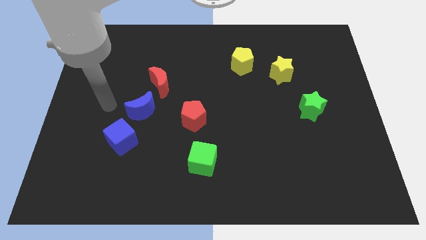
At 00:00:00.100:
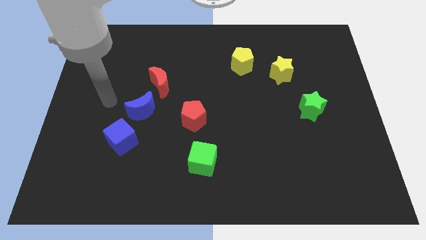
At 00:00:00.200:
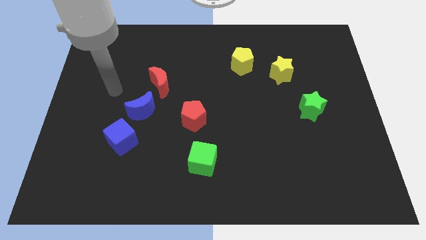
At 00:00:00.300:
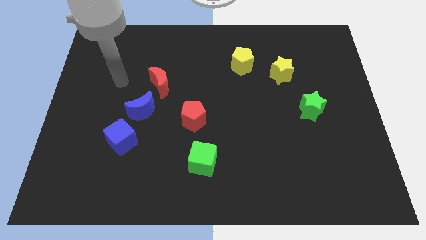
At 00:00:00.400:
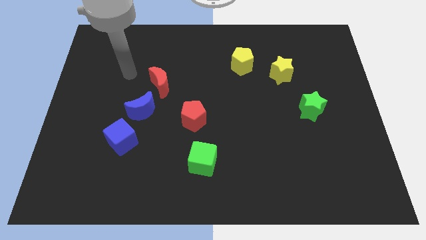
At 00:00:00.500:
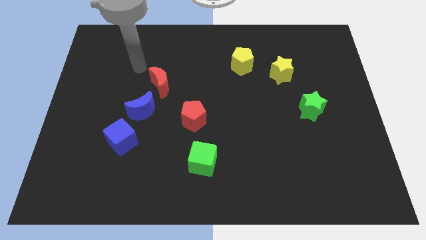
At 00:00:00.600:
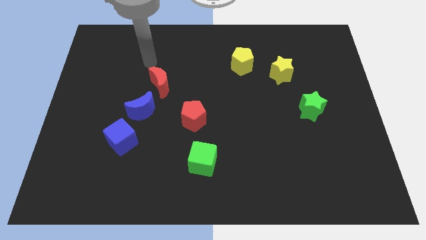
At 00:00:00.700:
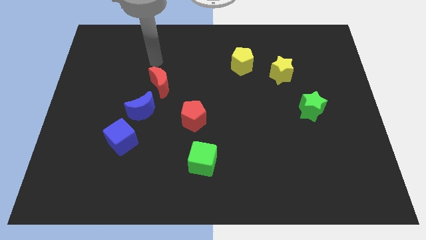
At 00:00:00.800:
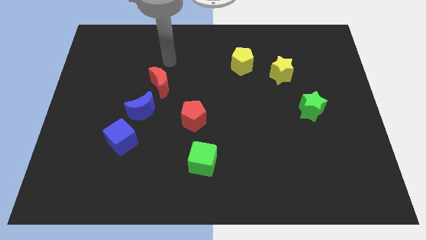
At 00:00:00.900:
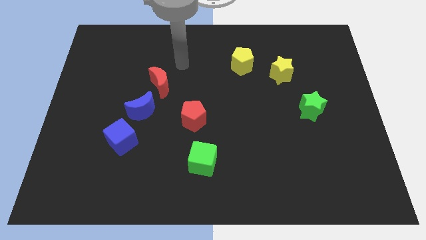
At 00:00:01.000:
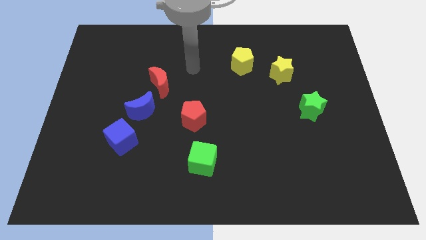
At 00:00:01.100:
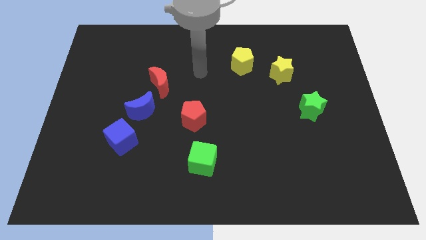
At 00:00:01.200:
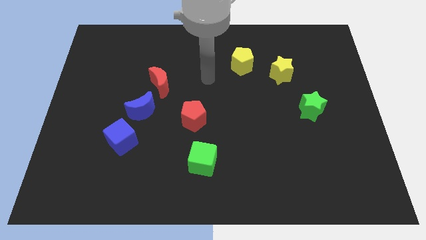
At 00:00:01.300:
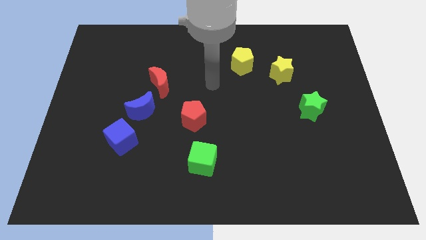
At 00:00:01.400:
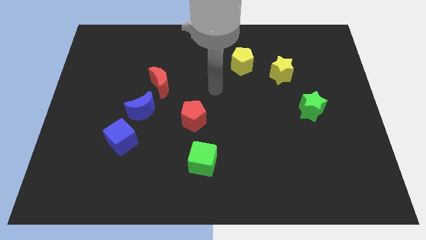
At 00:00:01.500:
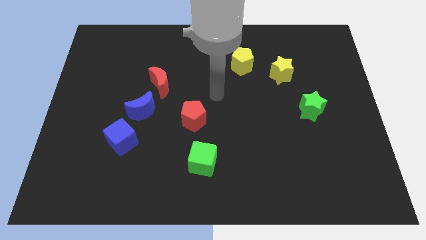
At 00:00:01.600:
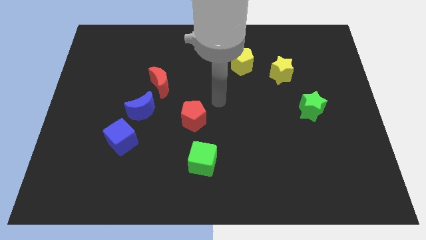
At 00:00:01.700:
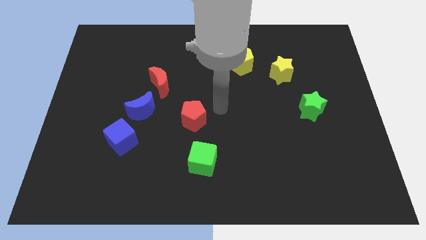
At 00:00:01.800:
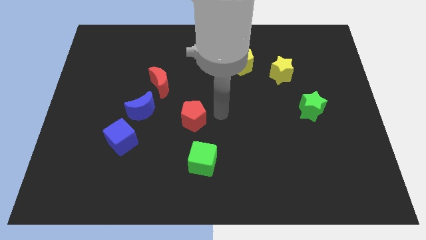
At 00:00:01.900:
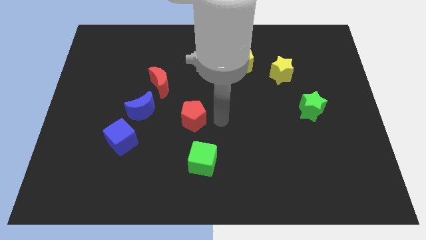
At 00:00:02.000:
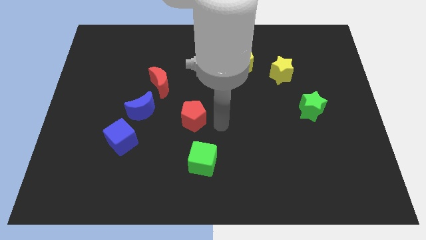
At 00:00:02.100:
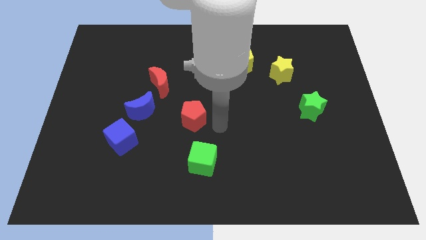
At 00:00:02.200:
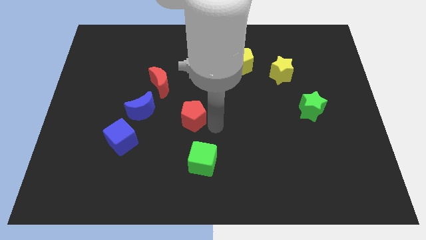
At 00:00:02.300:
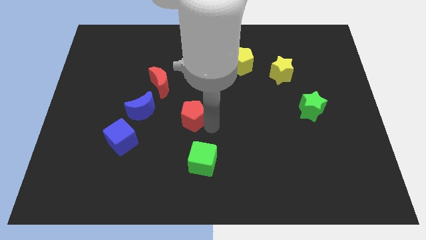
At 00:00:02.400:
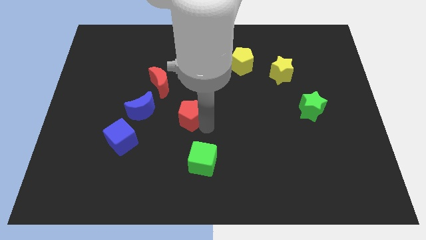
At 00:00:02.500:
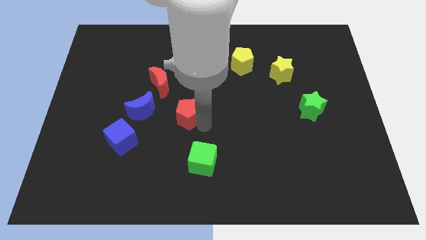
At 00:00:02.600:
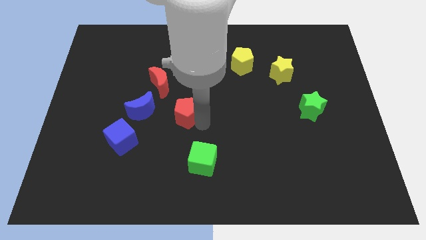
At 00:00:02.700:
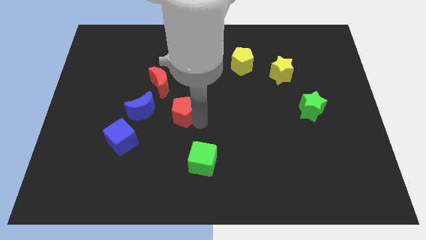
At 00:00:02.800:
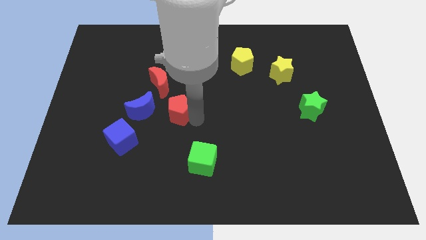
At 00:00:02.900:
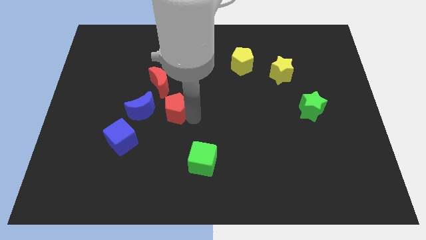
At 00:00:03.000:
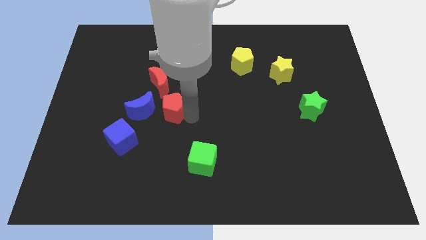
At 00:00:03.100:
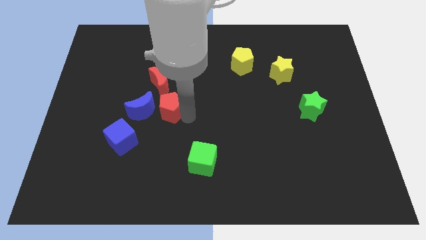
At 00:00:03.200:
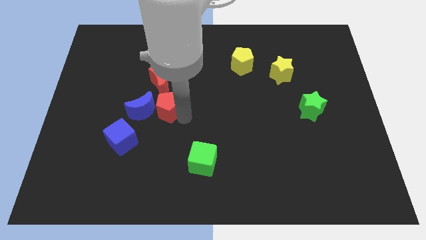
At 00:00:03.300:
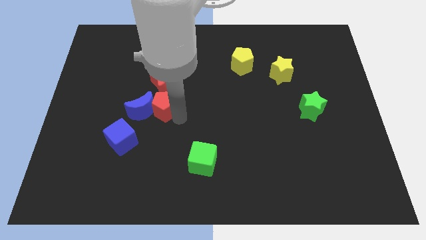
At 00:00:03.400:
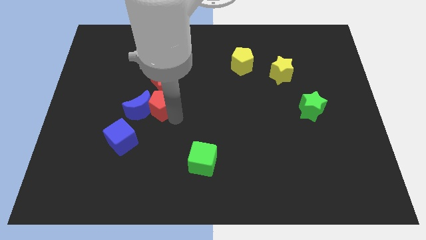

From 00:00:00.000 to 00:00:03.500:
push the red pentagon close to the blue moon

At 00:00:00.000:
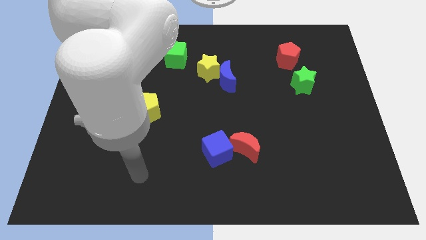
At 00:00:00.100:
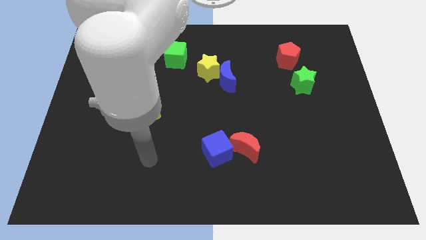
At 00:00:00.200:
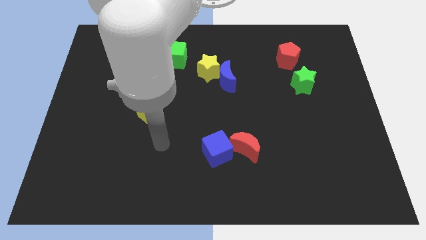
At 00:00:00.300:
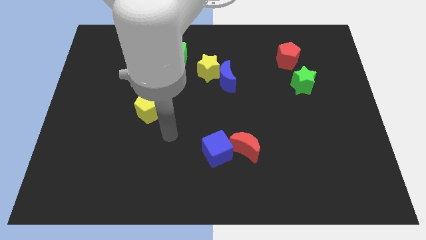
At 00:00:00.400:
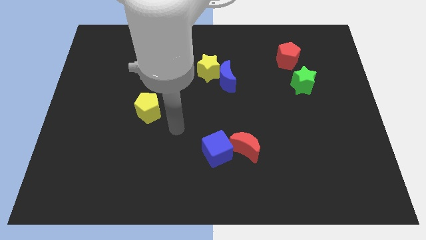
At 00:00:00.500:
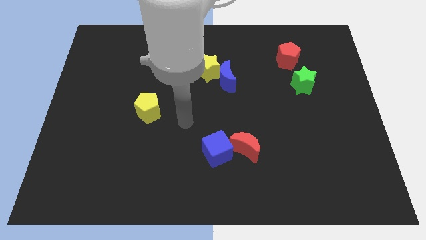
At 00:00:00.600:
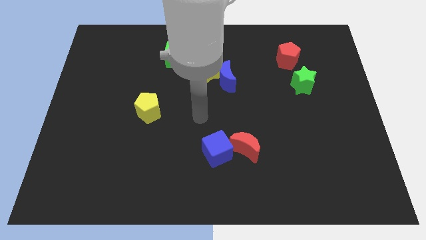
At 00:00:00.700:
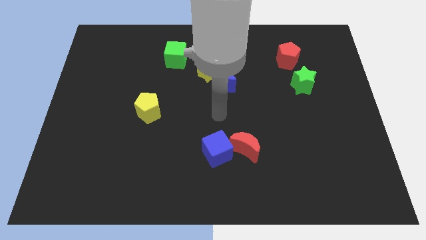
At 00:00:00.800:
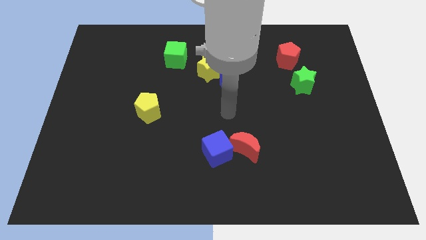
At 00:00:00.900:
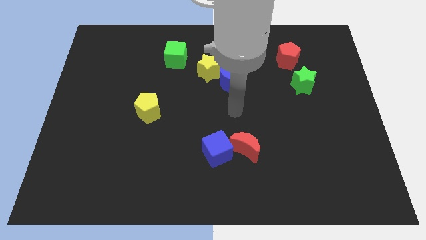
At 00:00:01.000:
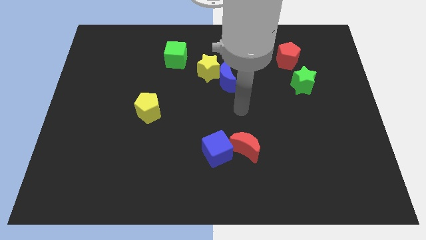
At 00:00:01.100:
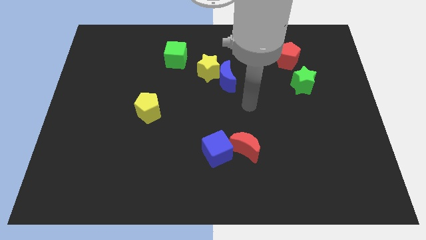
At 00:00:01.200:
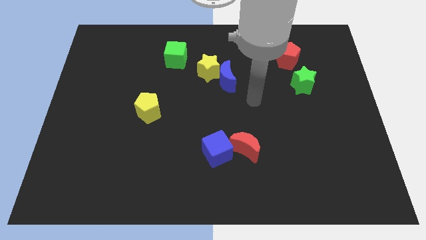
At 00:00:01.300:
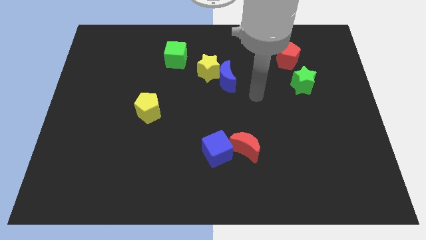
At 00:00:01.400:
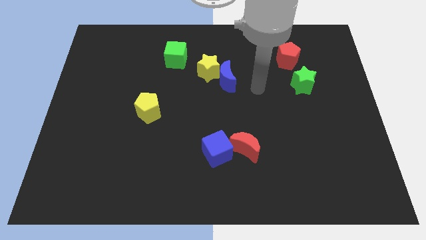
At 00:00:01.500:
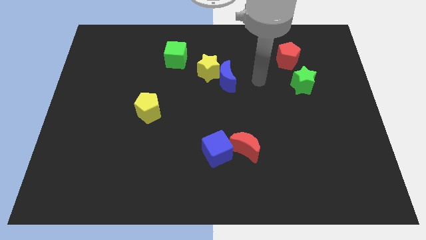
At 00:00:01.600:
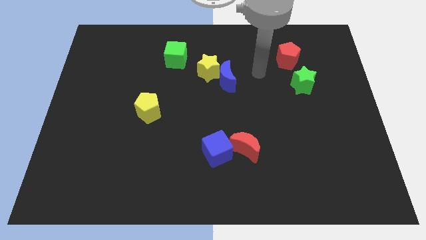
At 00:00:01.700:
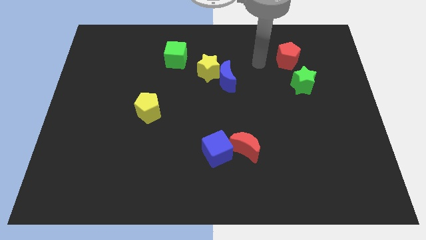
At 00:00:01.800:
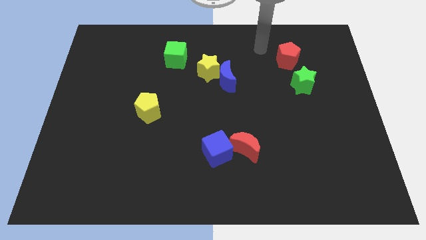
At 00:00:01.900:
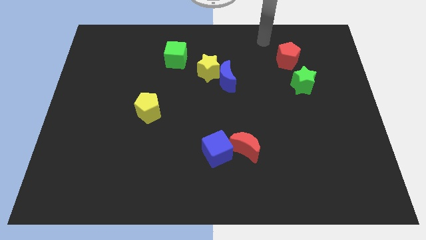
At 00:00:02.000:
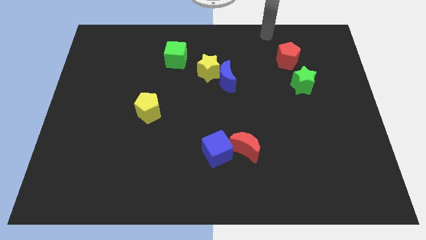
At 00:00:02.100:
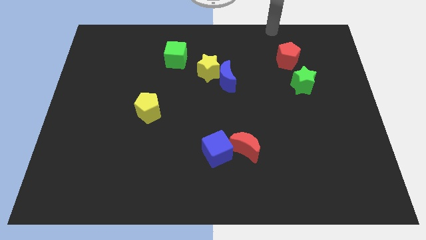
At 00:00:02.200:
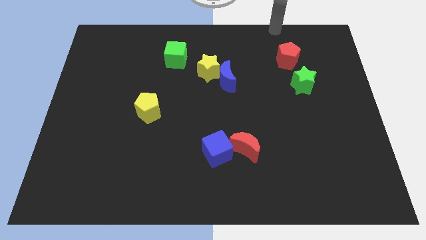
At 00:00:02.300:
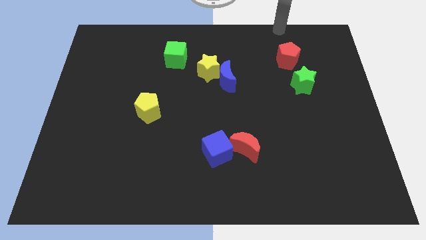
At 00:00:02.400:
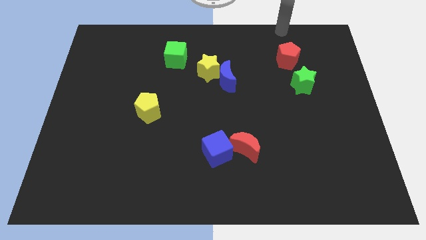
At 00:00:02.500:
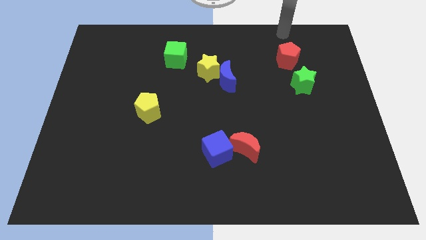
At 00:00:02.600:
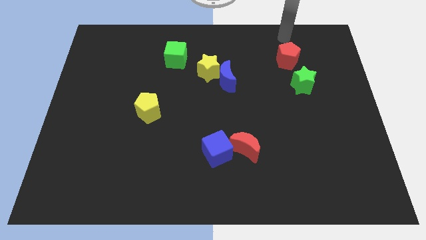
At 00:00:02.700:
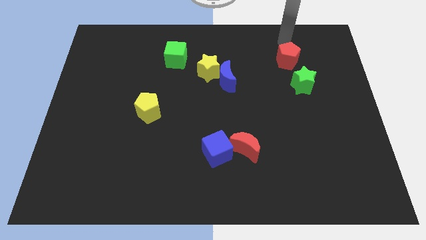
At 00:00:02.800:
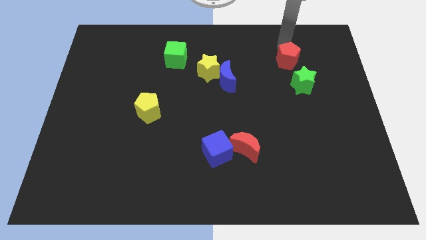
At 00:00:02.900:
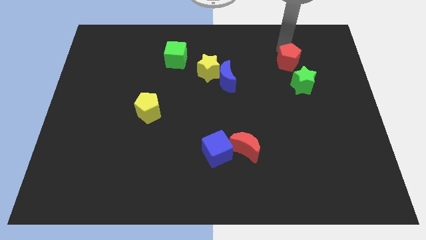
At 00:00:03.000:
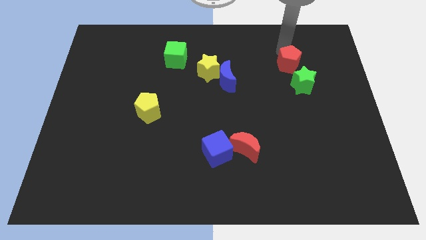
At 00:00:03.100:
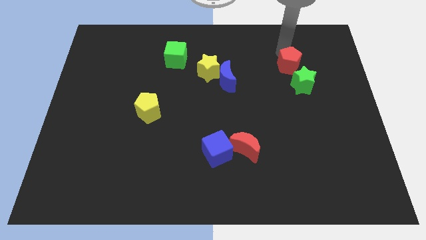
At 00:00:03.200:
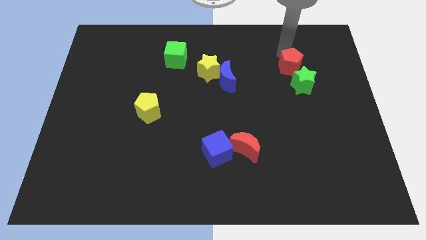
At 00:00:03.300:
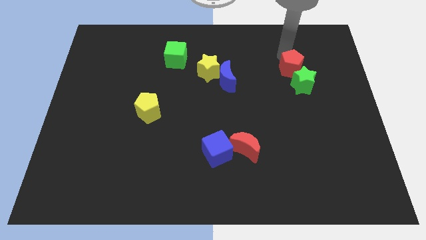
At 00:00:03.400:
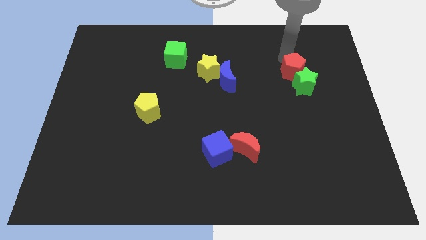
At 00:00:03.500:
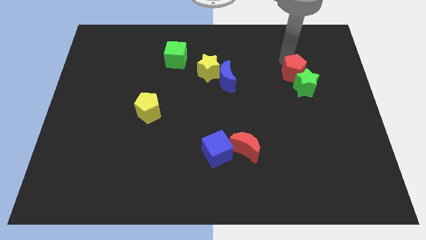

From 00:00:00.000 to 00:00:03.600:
slide the red pentagon close to the green star

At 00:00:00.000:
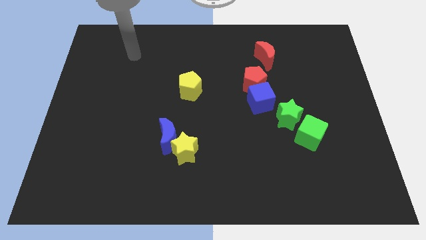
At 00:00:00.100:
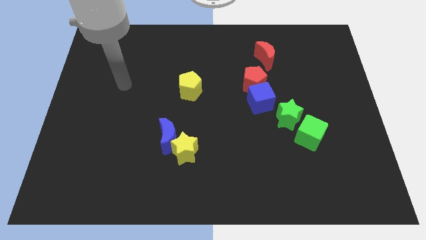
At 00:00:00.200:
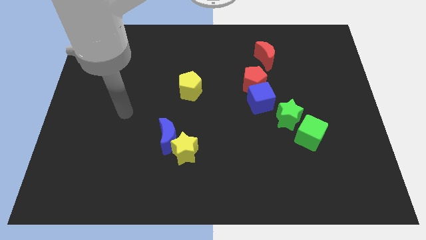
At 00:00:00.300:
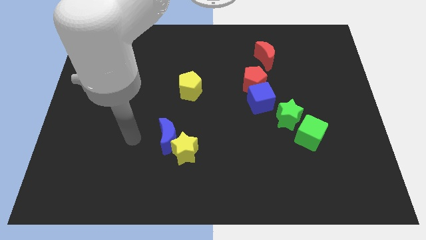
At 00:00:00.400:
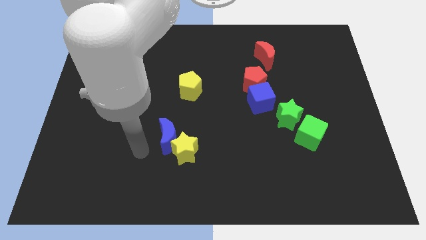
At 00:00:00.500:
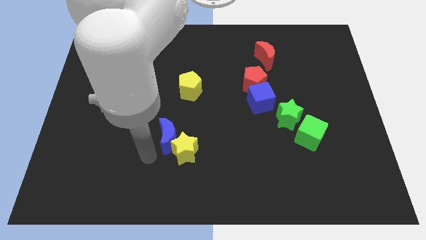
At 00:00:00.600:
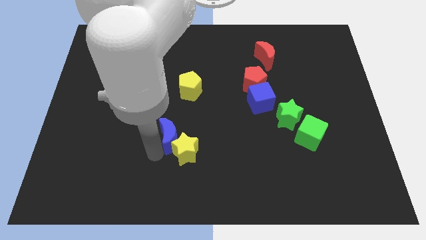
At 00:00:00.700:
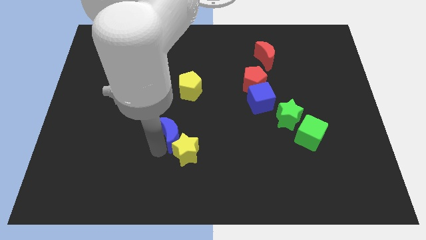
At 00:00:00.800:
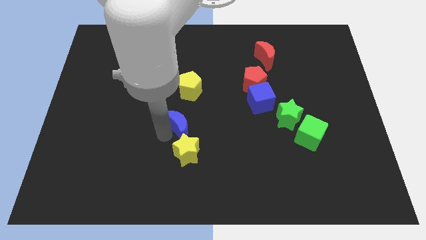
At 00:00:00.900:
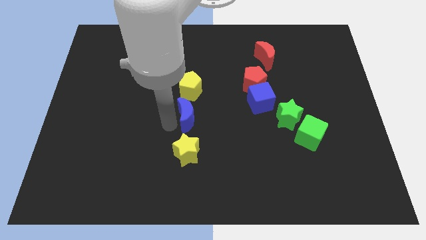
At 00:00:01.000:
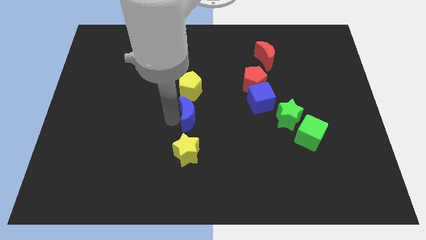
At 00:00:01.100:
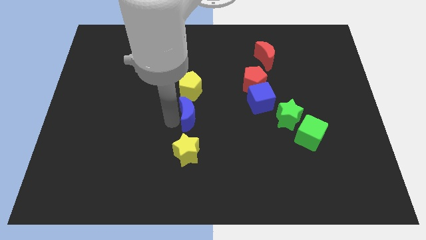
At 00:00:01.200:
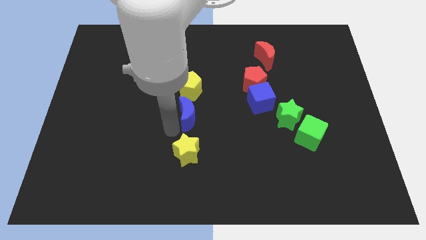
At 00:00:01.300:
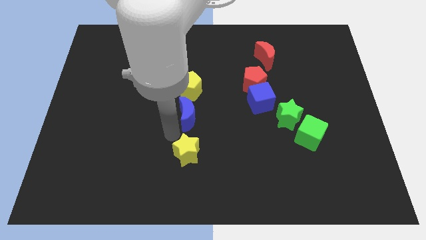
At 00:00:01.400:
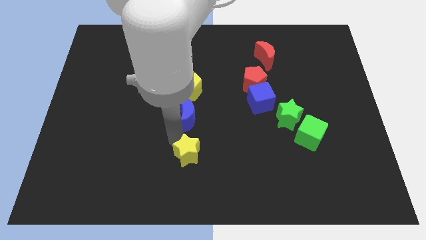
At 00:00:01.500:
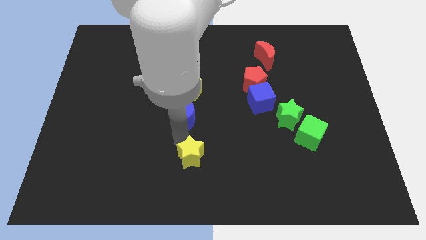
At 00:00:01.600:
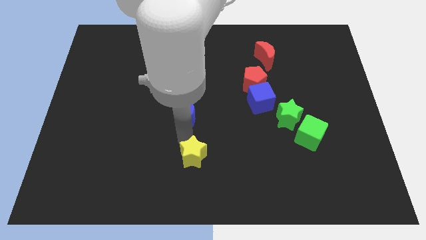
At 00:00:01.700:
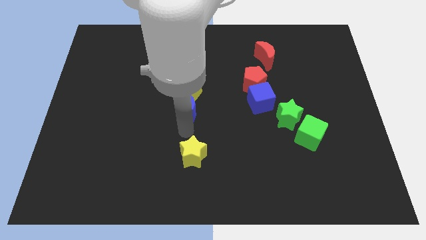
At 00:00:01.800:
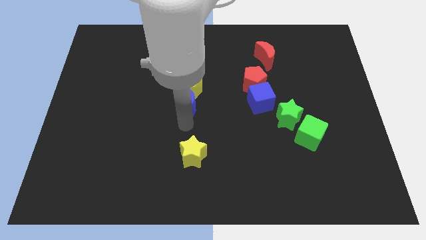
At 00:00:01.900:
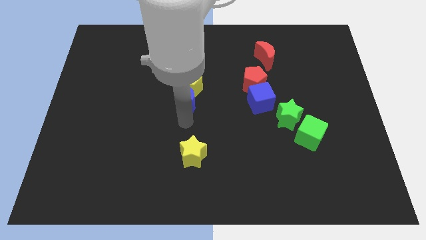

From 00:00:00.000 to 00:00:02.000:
move the blue moon close to the yellow pentagon
